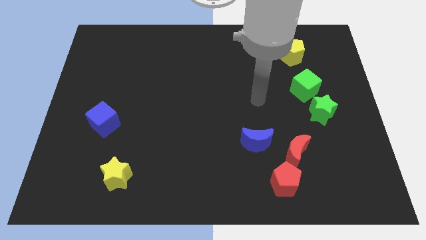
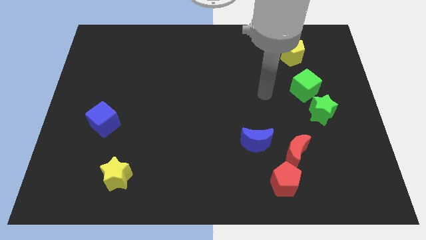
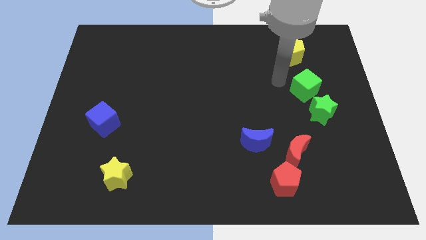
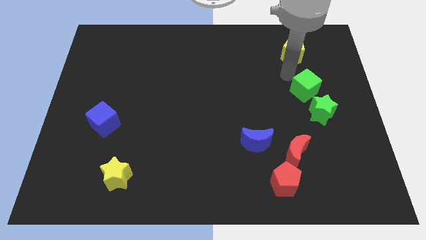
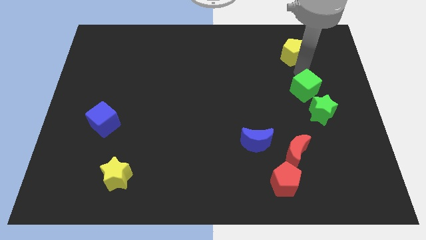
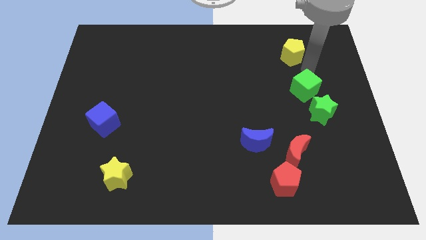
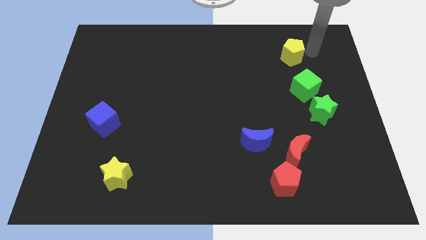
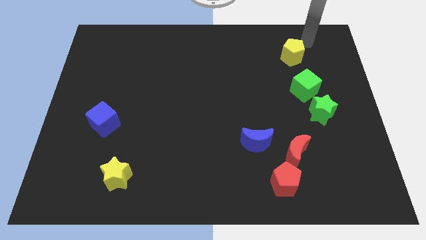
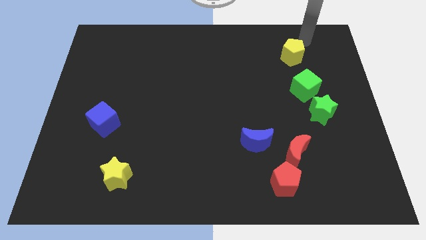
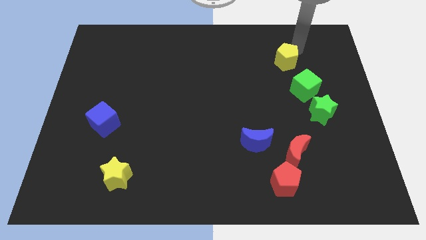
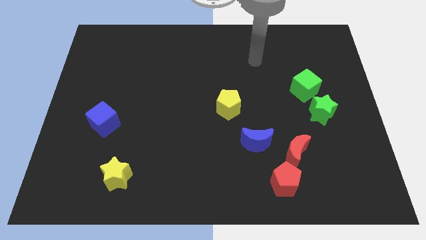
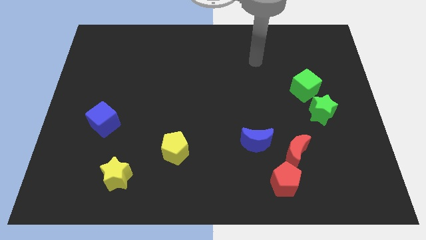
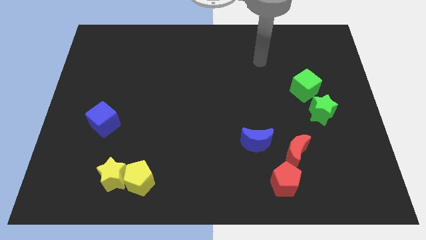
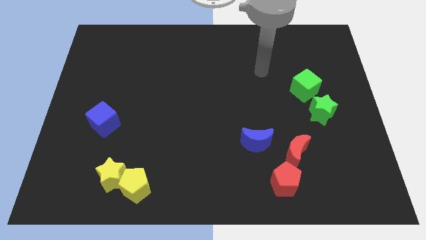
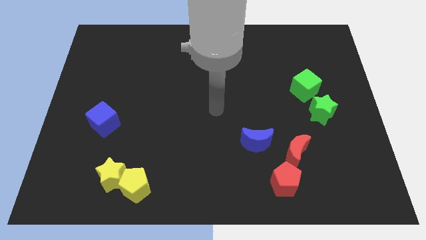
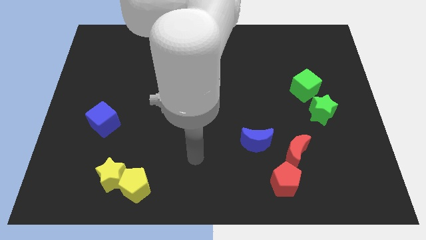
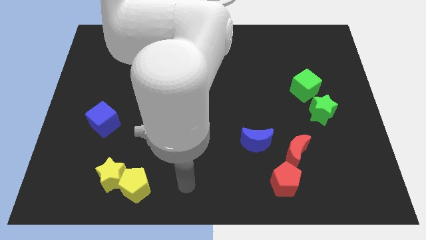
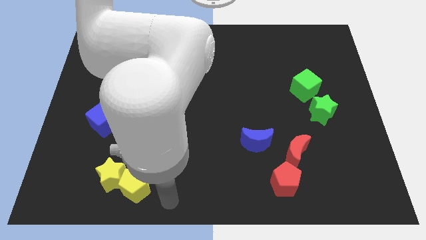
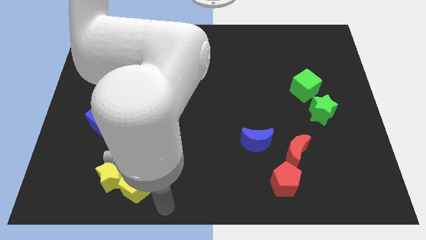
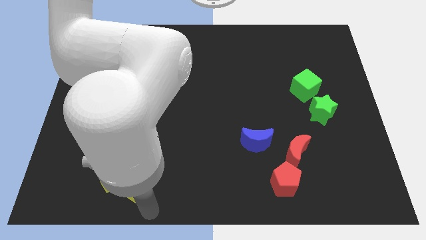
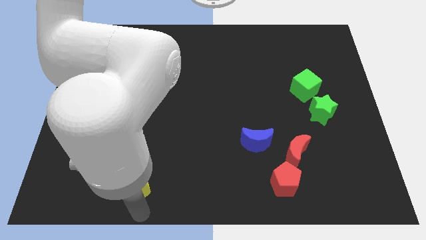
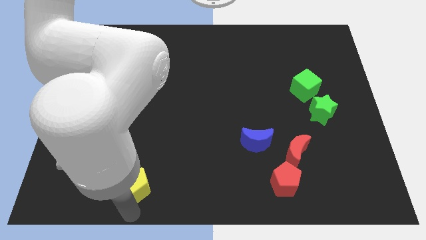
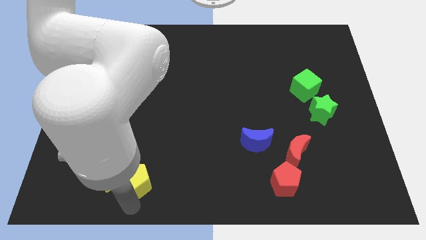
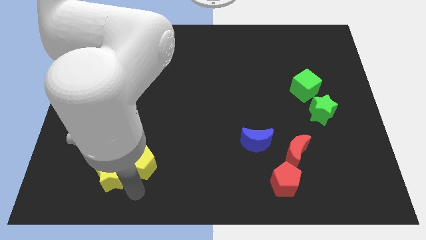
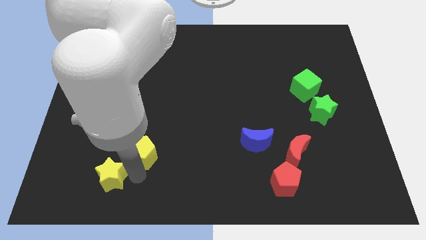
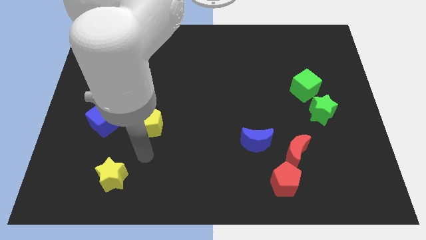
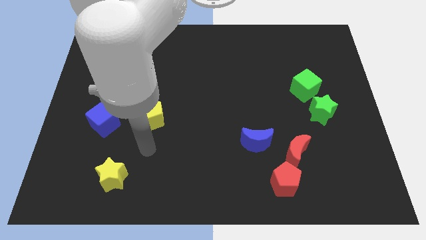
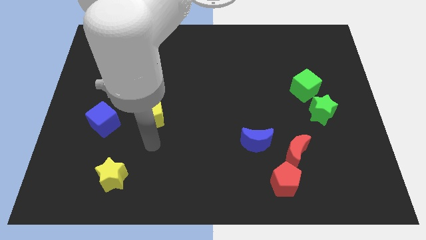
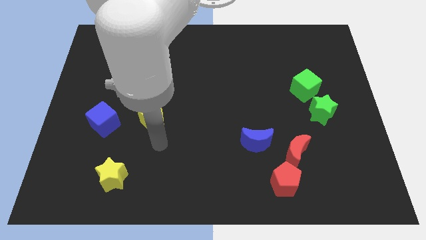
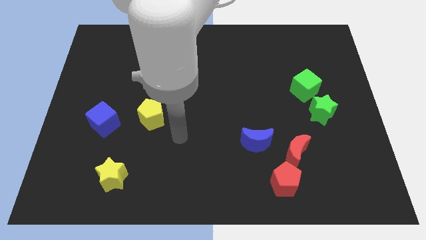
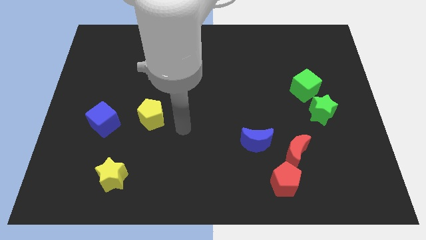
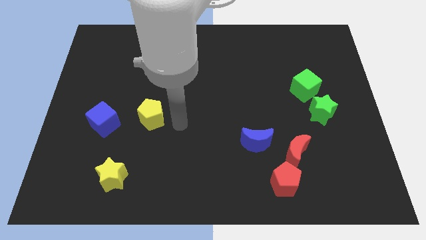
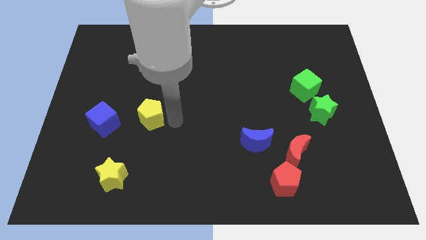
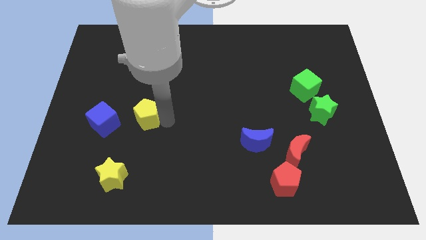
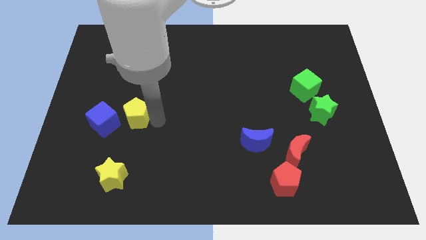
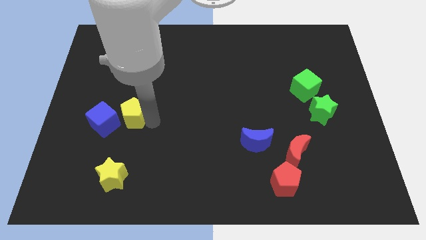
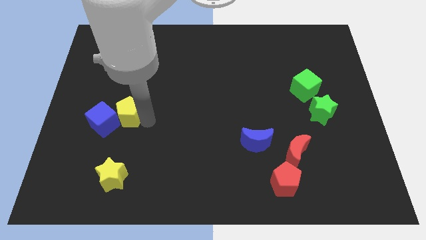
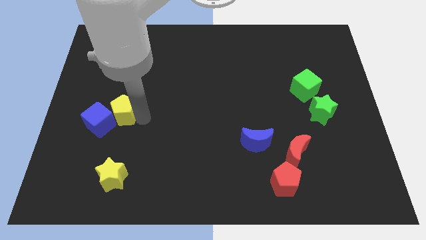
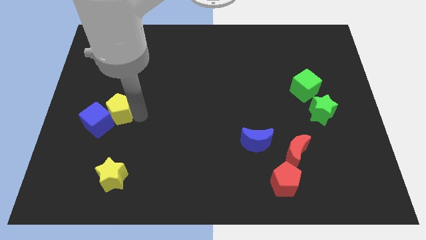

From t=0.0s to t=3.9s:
put the yellow pentagon next to the blue cube

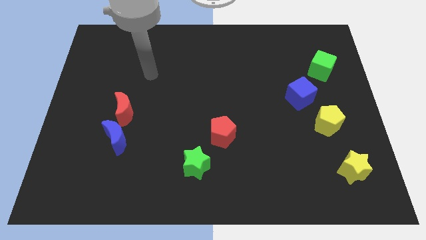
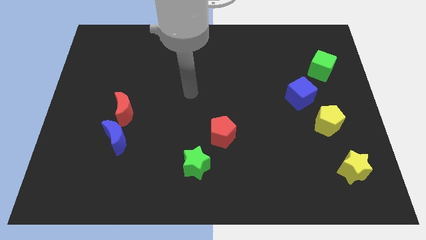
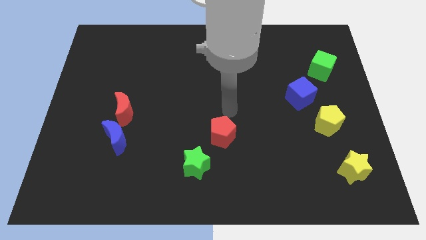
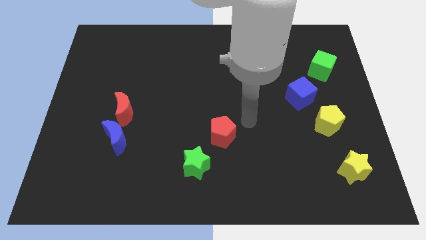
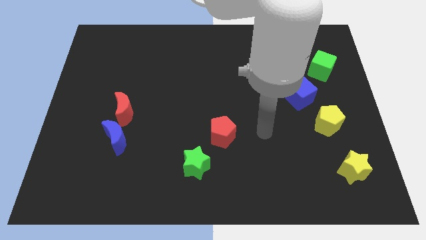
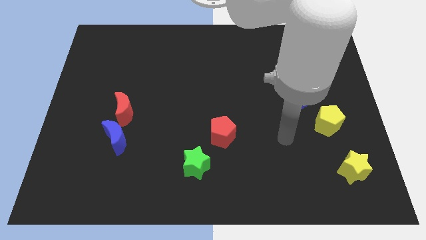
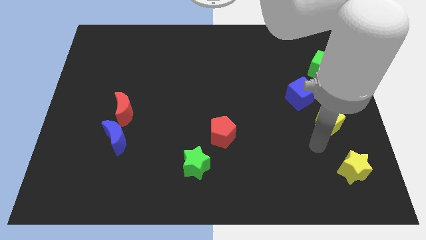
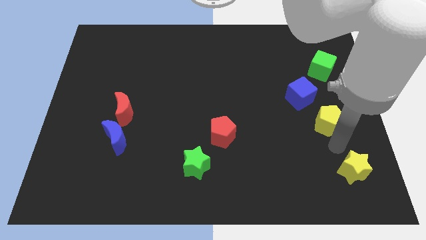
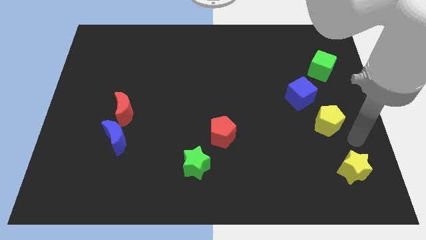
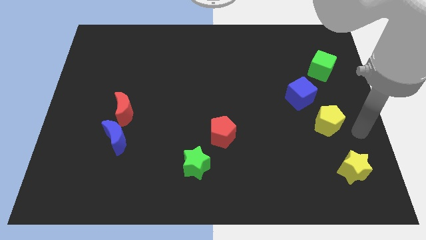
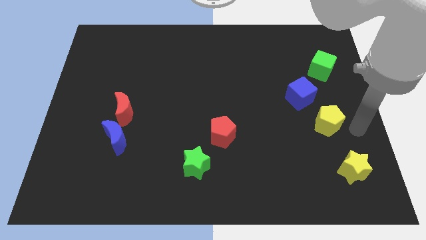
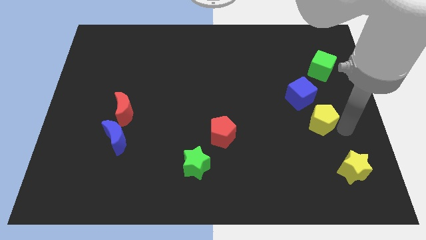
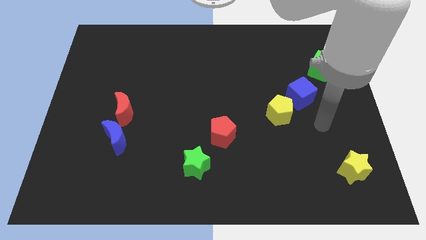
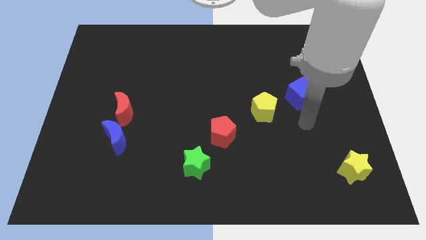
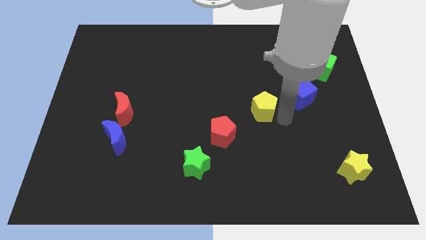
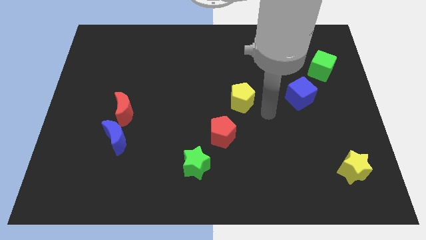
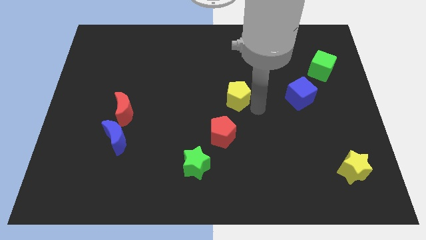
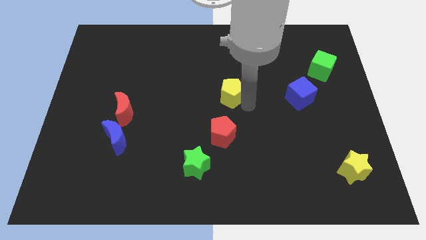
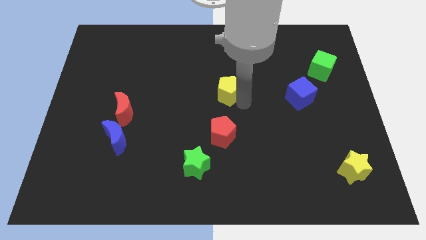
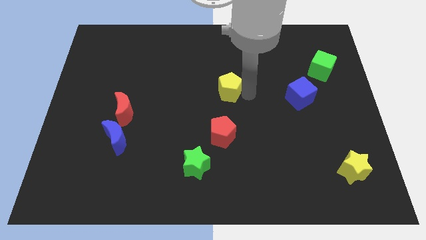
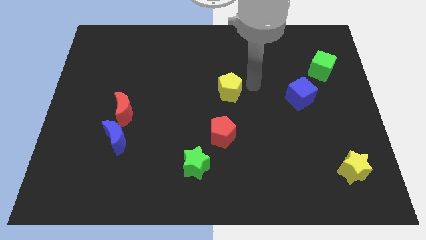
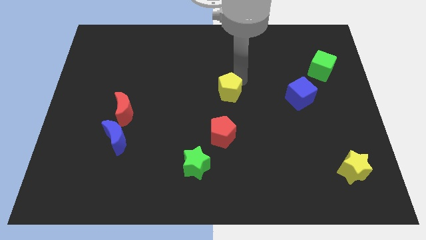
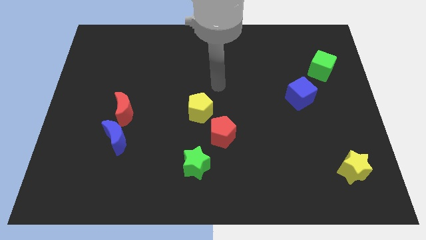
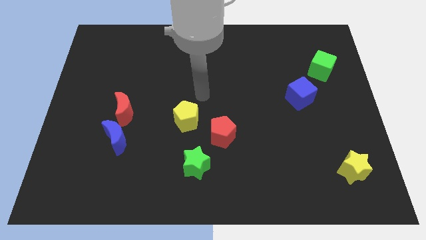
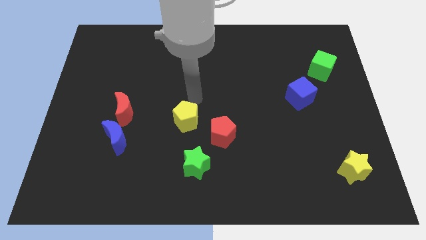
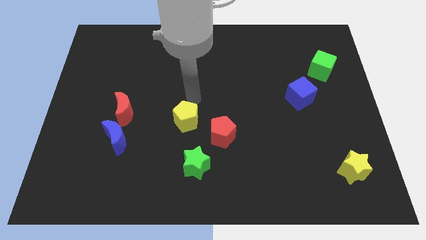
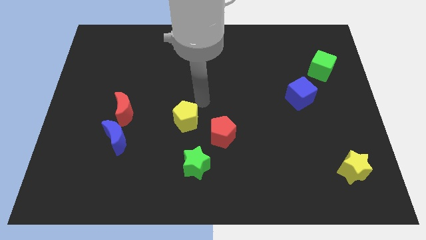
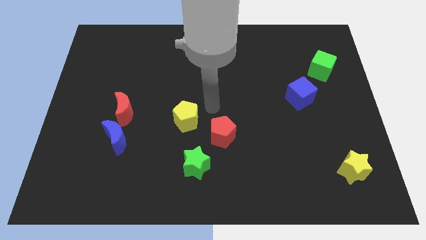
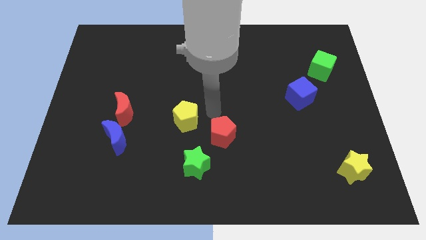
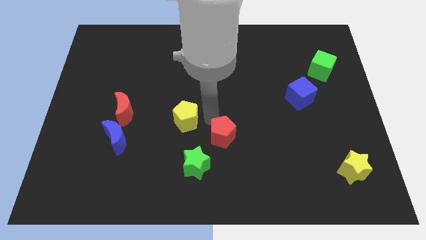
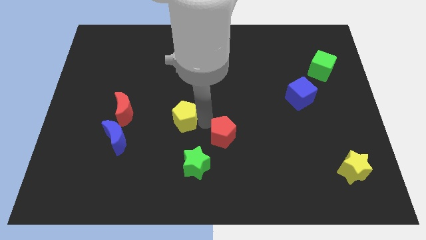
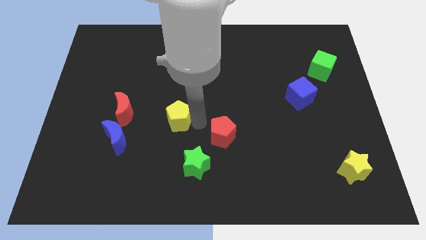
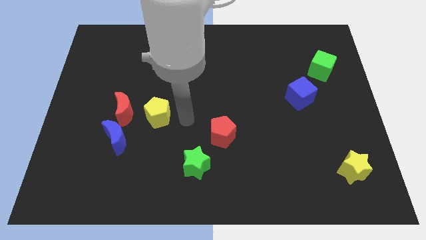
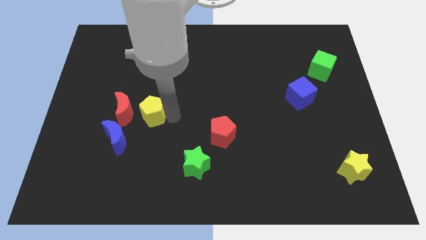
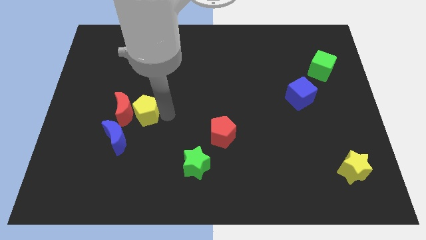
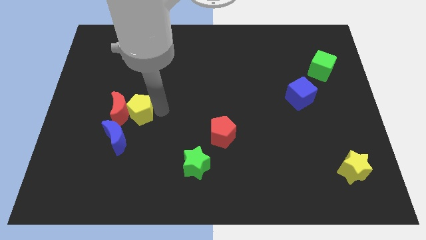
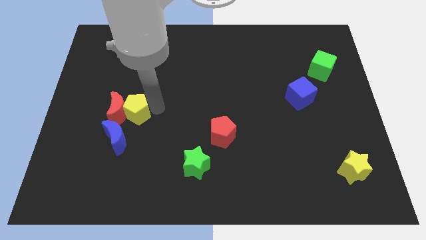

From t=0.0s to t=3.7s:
move the yellow pentagon towards the red moon

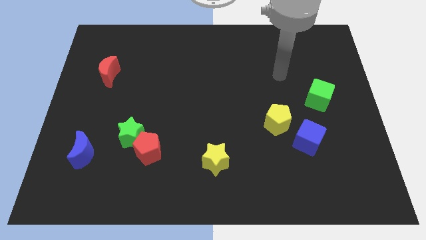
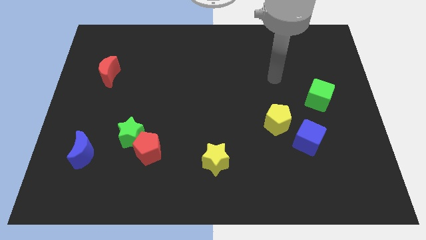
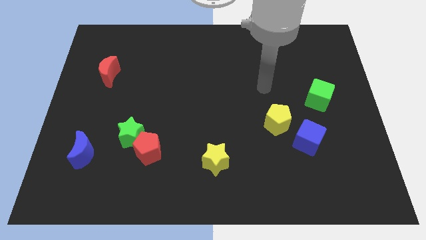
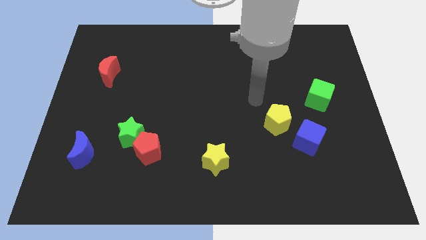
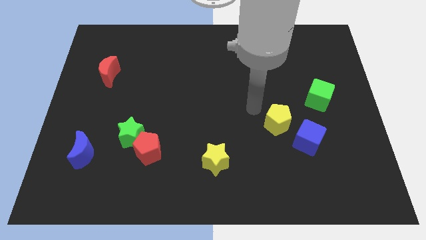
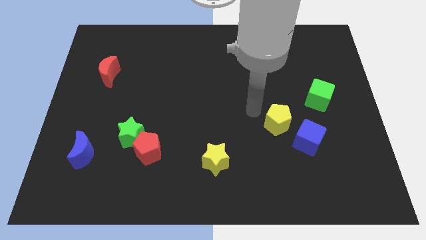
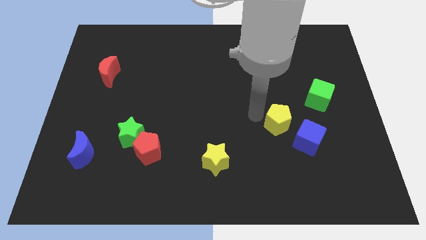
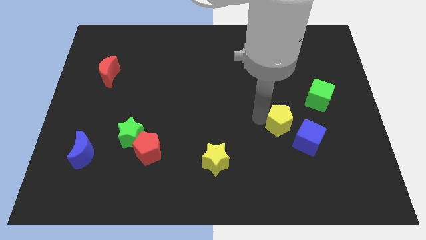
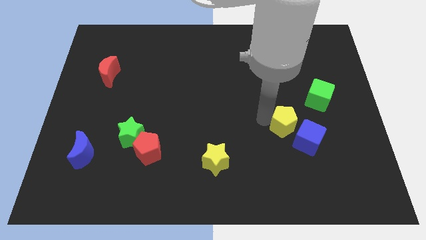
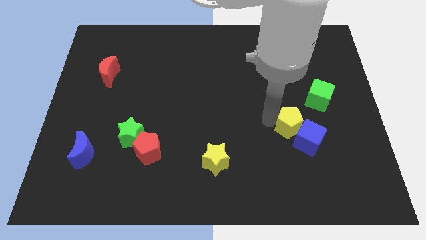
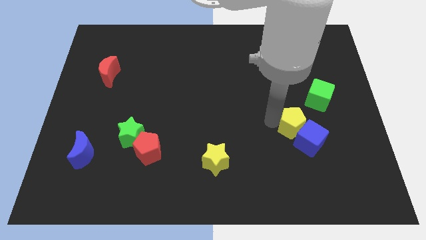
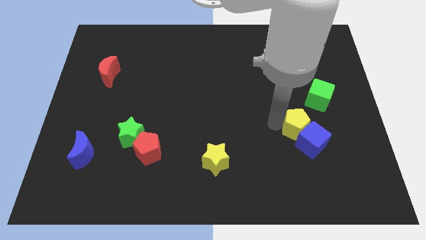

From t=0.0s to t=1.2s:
put the yellow pentagon to the blue cube
